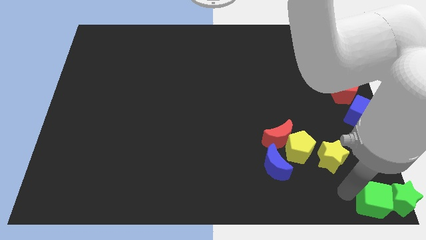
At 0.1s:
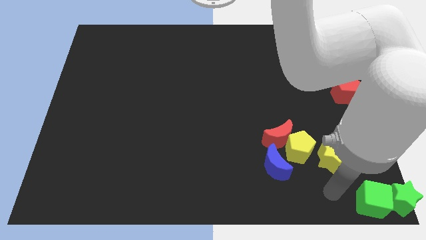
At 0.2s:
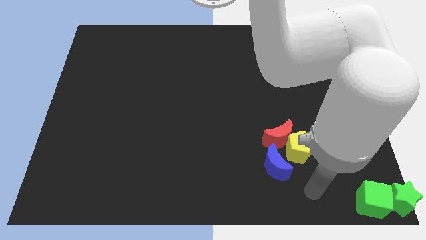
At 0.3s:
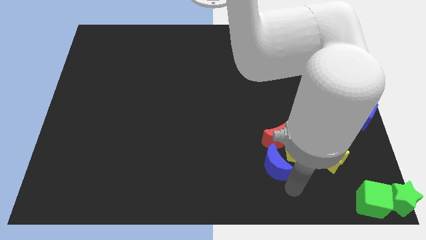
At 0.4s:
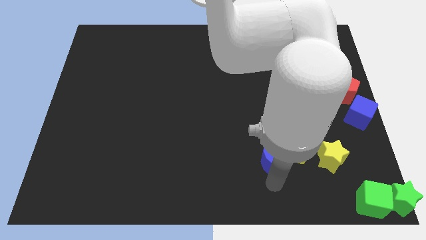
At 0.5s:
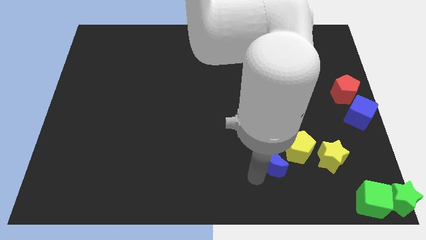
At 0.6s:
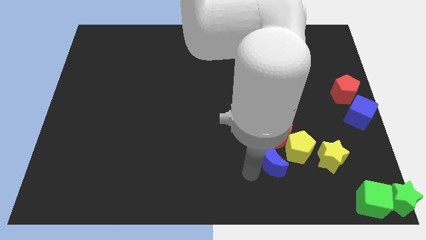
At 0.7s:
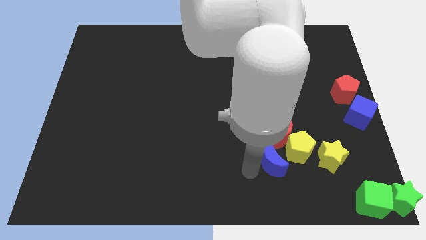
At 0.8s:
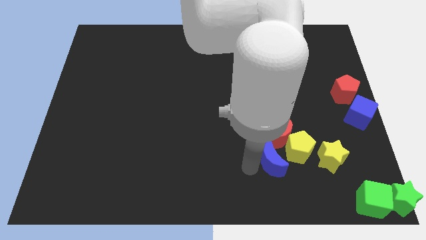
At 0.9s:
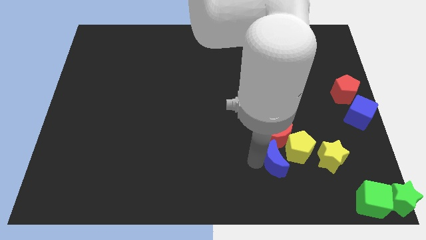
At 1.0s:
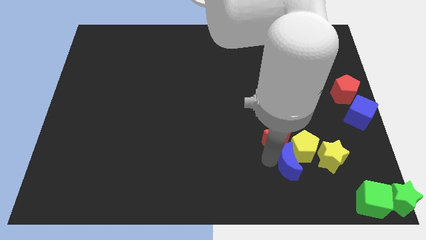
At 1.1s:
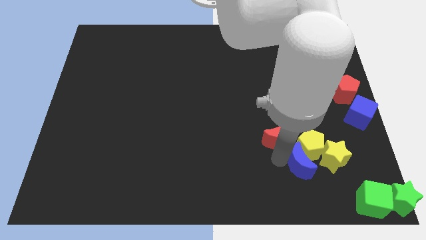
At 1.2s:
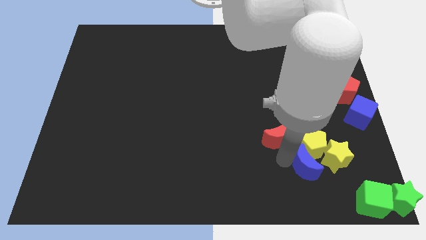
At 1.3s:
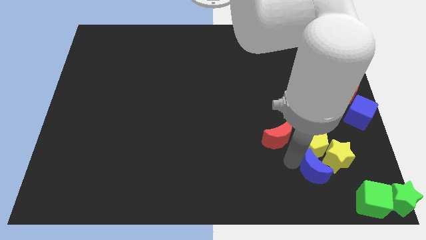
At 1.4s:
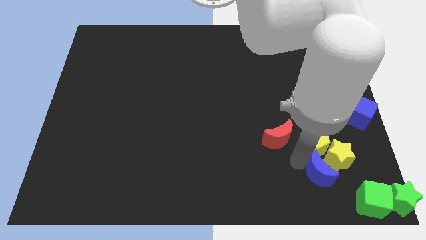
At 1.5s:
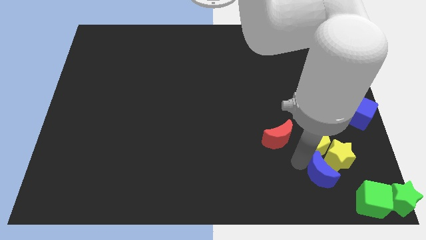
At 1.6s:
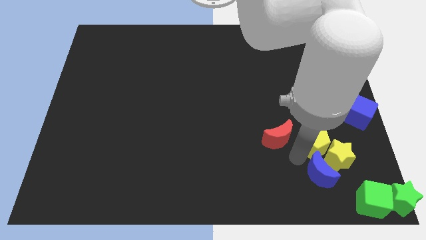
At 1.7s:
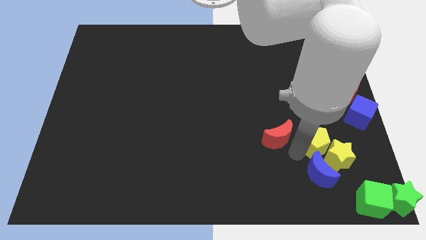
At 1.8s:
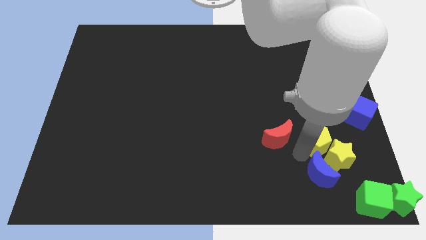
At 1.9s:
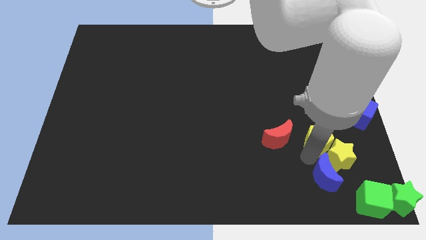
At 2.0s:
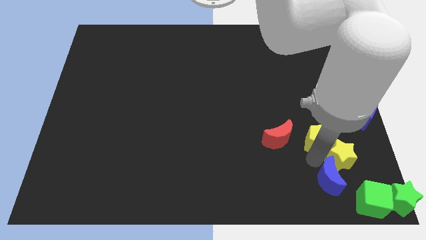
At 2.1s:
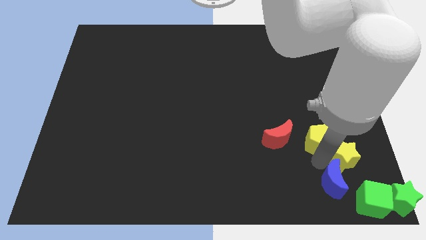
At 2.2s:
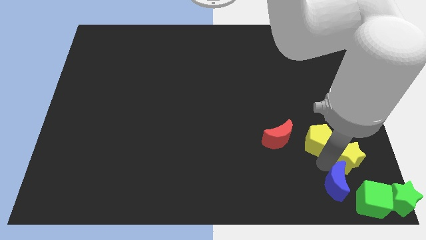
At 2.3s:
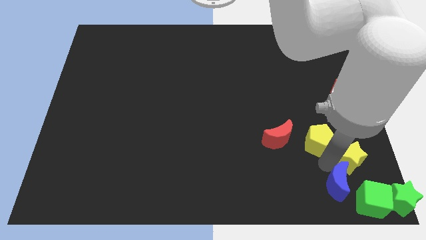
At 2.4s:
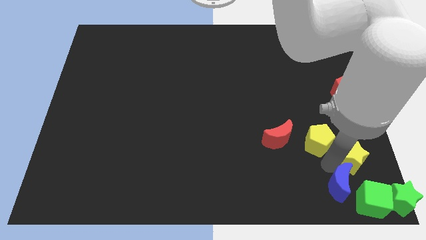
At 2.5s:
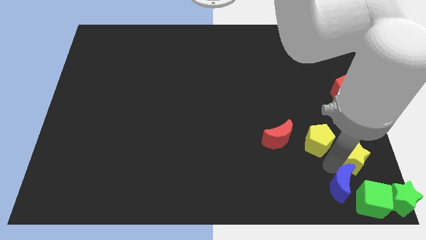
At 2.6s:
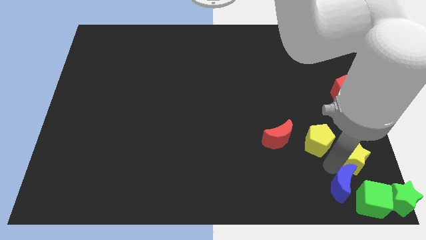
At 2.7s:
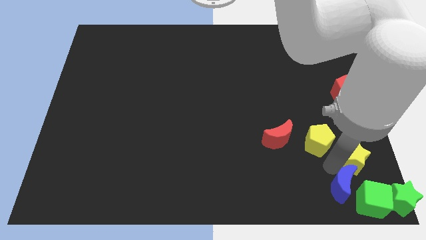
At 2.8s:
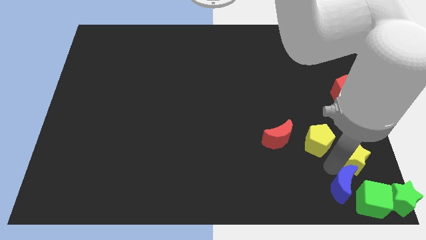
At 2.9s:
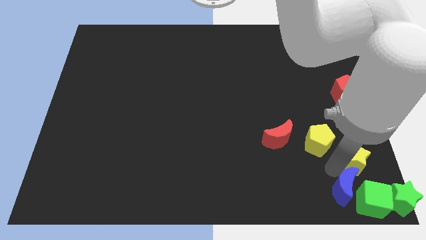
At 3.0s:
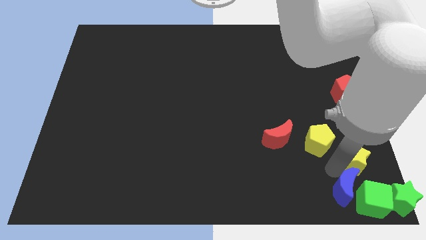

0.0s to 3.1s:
push the blue crescent into the yellow star

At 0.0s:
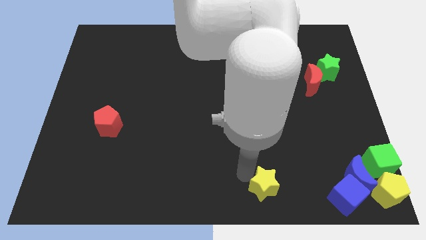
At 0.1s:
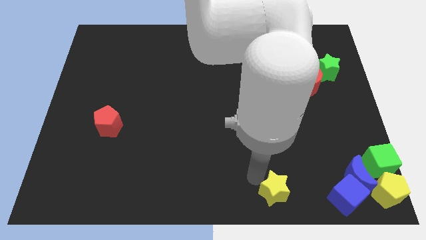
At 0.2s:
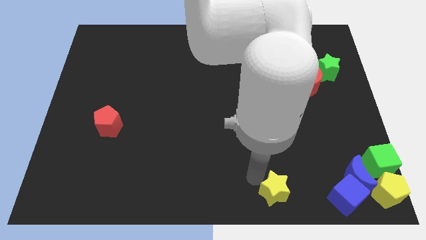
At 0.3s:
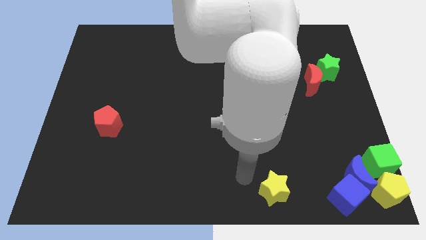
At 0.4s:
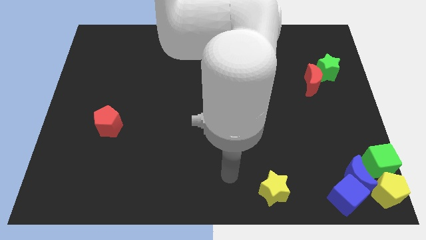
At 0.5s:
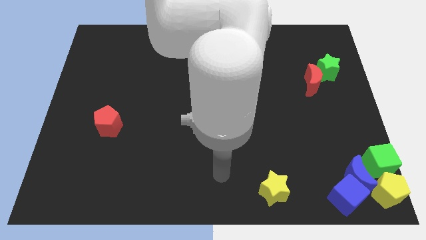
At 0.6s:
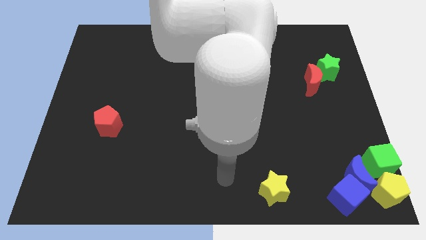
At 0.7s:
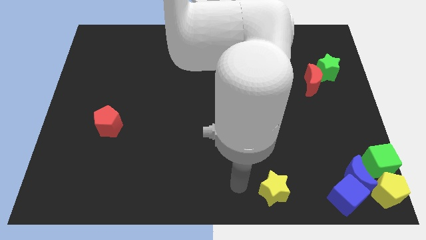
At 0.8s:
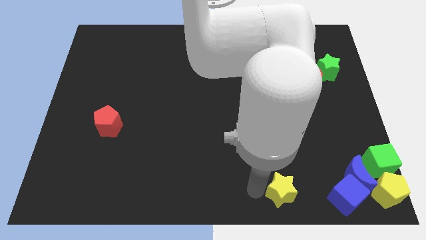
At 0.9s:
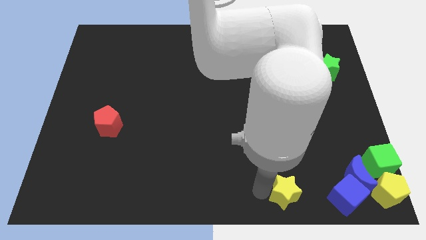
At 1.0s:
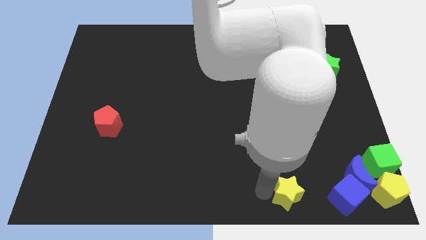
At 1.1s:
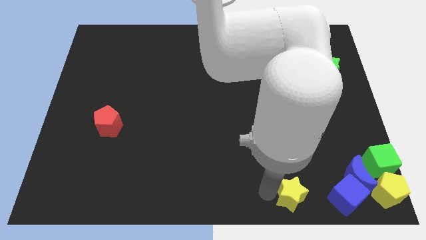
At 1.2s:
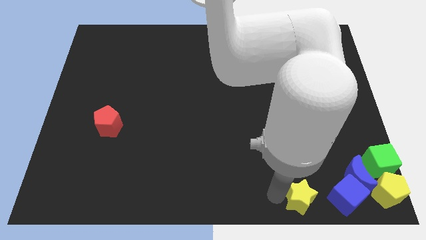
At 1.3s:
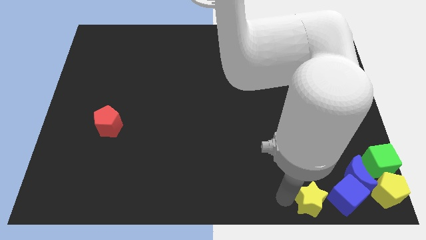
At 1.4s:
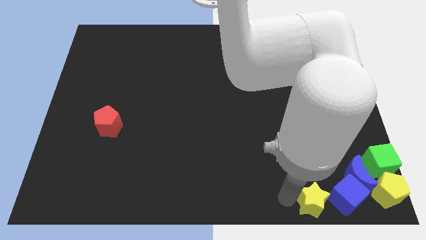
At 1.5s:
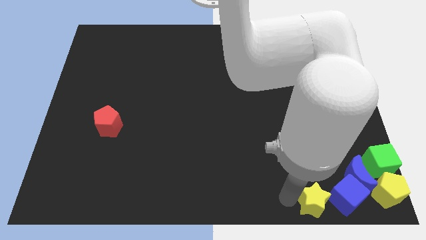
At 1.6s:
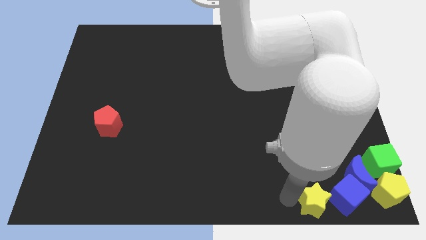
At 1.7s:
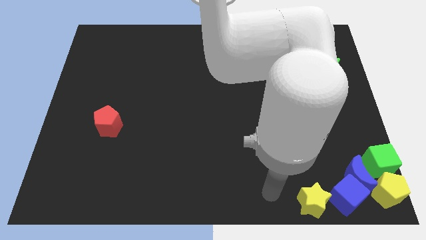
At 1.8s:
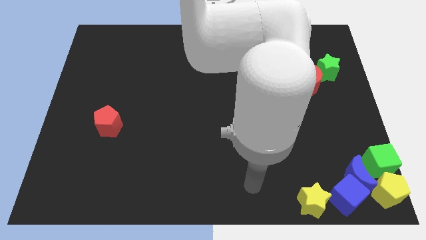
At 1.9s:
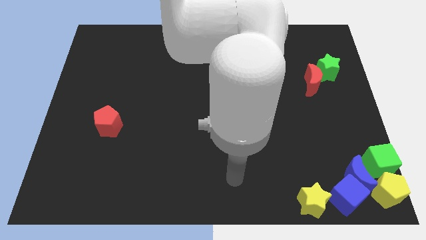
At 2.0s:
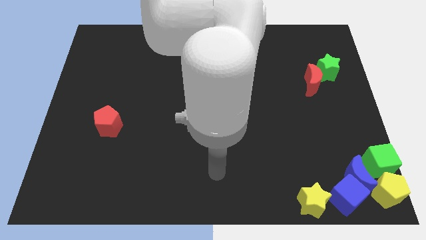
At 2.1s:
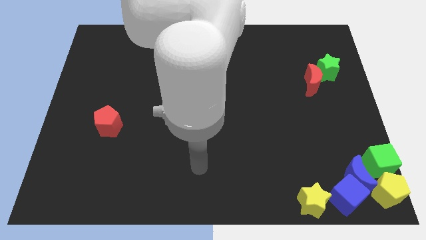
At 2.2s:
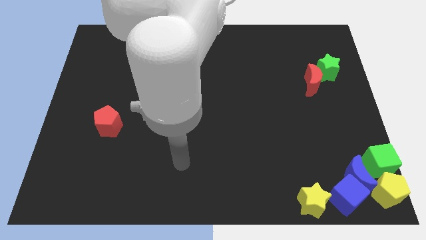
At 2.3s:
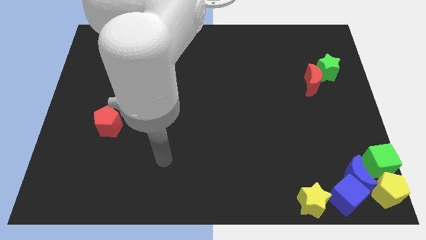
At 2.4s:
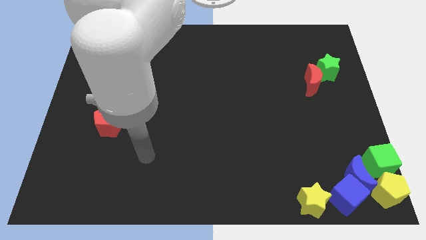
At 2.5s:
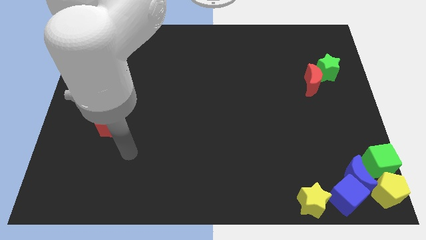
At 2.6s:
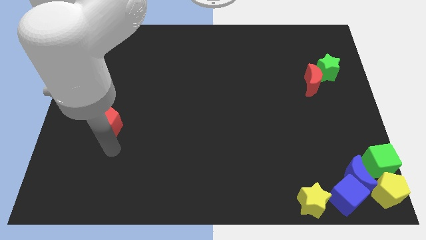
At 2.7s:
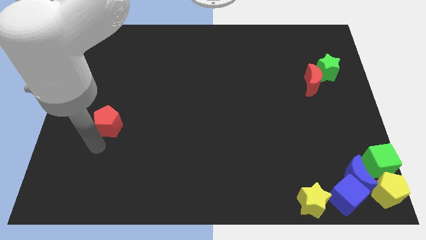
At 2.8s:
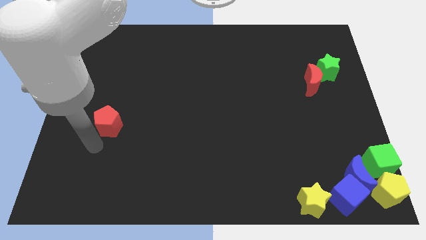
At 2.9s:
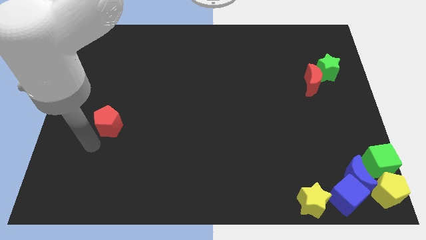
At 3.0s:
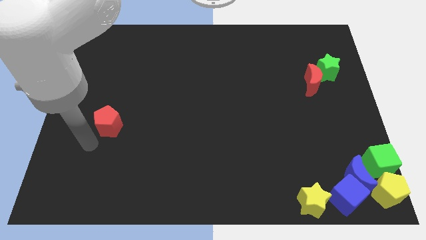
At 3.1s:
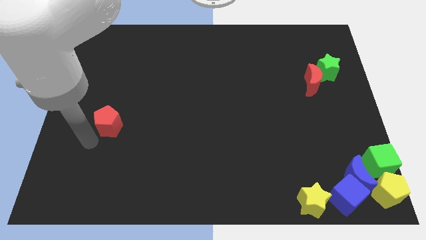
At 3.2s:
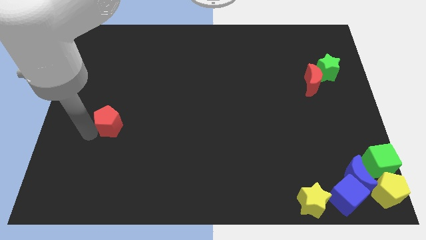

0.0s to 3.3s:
move the yellow star into the blue cube

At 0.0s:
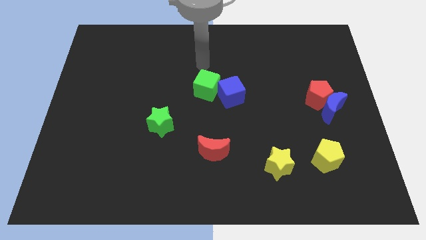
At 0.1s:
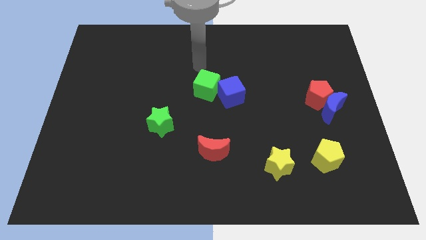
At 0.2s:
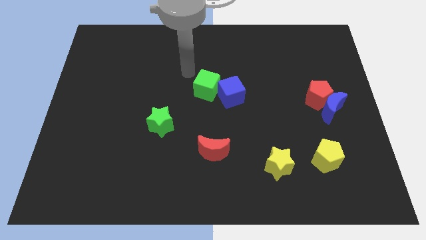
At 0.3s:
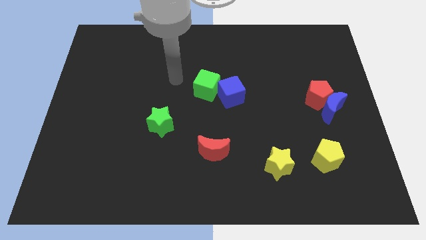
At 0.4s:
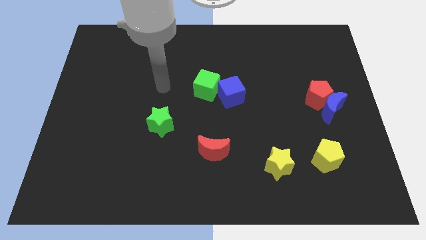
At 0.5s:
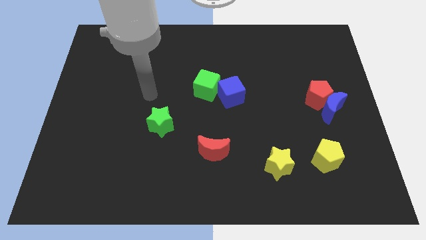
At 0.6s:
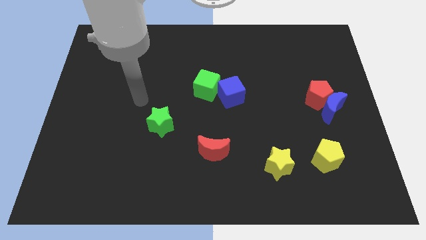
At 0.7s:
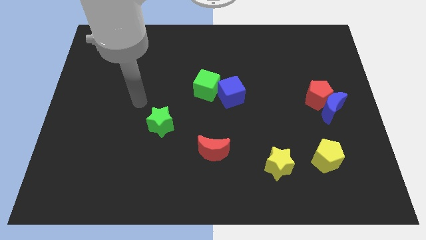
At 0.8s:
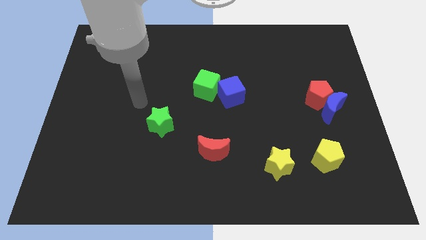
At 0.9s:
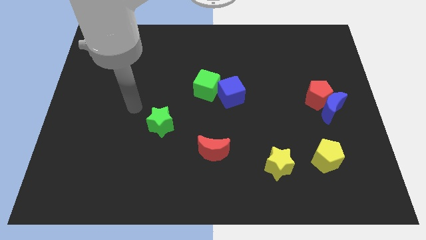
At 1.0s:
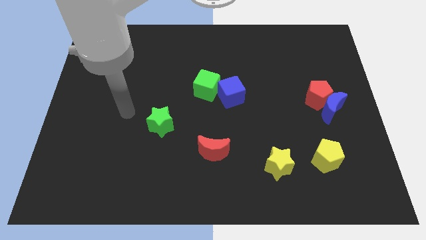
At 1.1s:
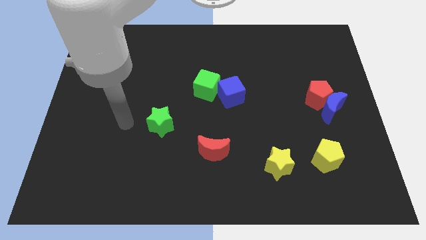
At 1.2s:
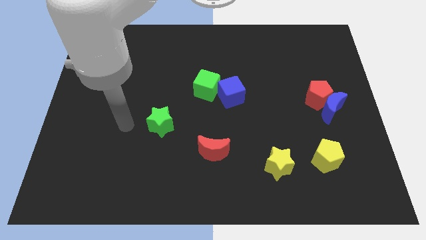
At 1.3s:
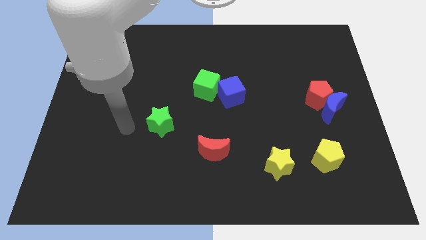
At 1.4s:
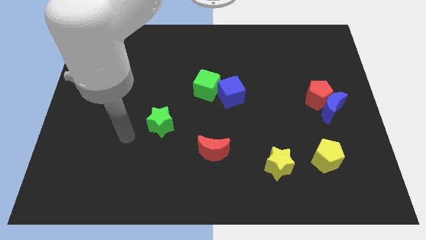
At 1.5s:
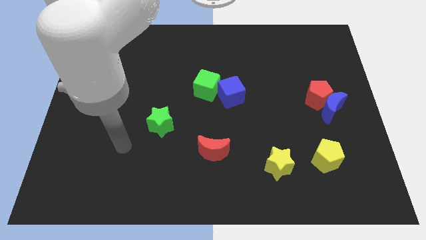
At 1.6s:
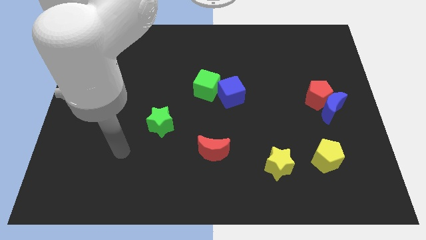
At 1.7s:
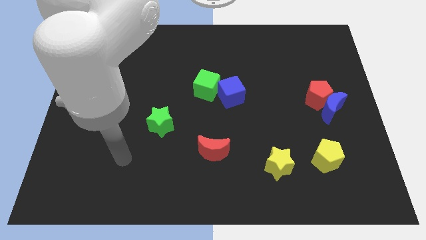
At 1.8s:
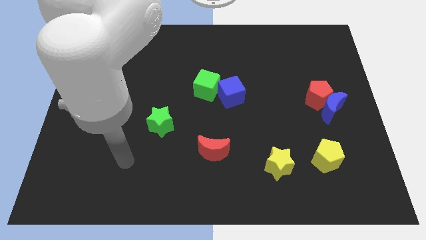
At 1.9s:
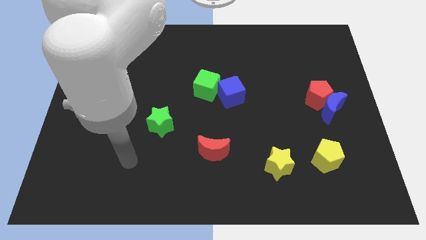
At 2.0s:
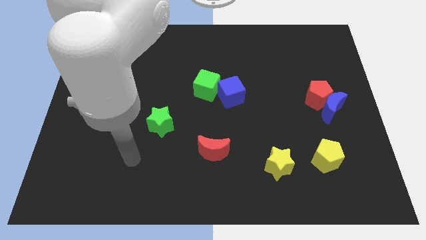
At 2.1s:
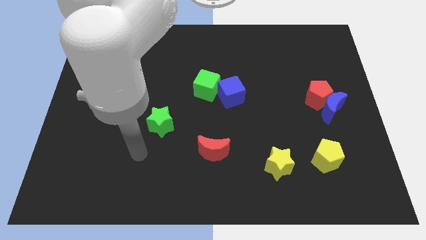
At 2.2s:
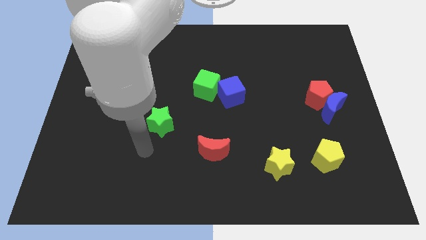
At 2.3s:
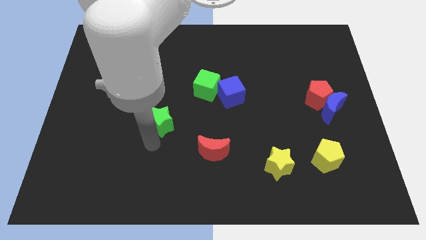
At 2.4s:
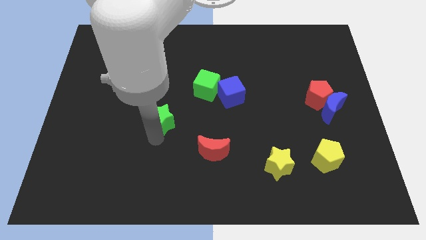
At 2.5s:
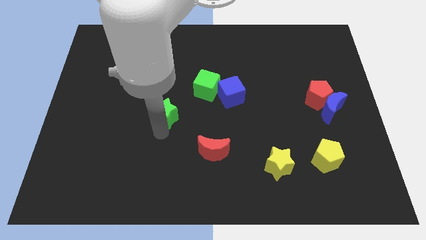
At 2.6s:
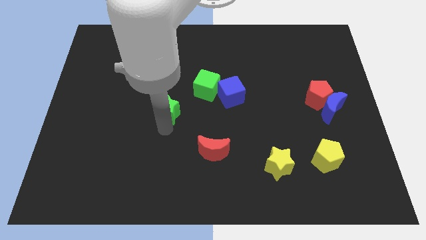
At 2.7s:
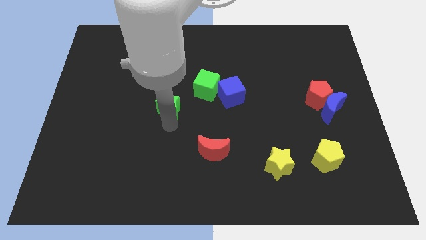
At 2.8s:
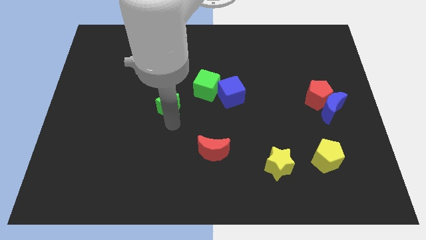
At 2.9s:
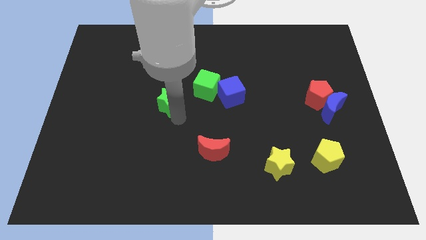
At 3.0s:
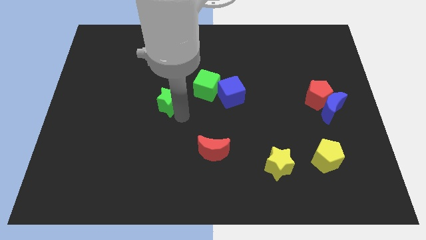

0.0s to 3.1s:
push the green star slightly upwards
